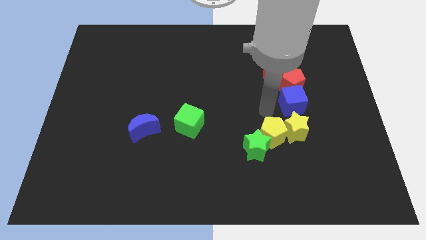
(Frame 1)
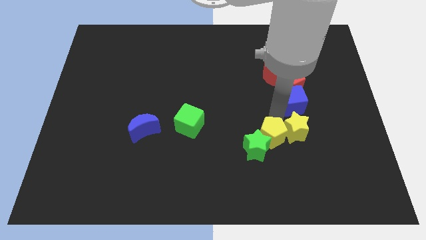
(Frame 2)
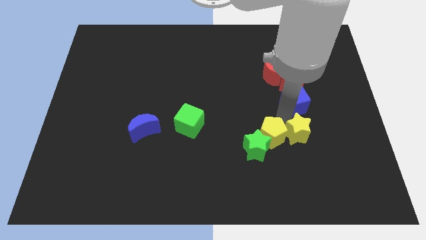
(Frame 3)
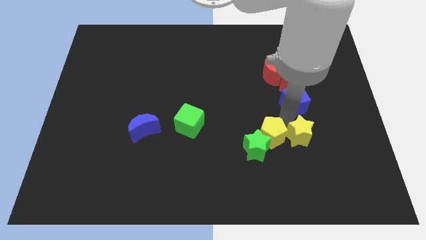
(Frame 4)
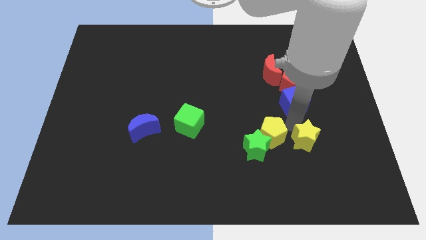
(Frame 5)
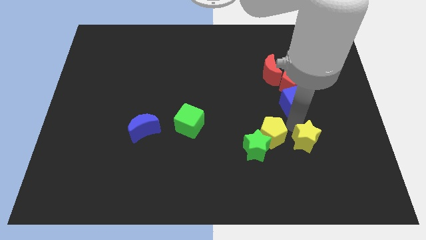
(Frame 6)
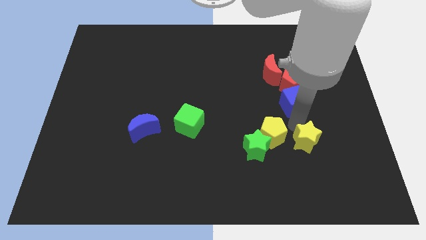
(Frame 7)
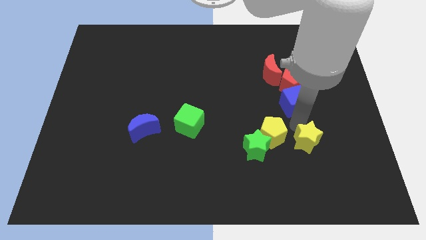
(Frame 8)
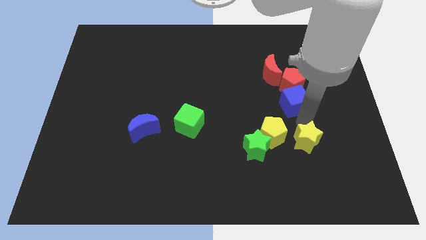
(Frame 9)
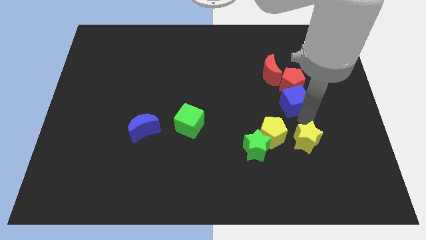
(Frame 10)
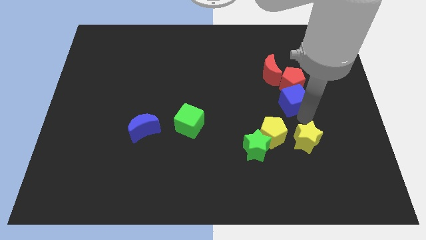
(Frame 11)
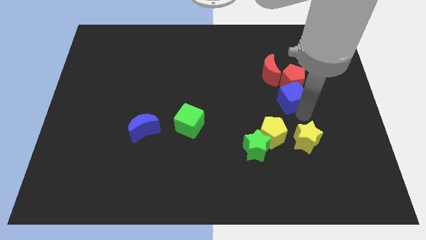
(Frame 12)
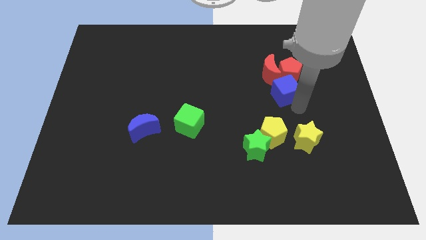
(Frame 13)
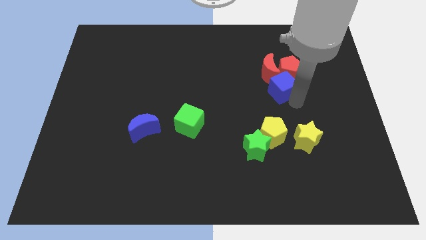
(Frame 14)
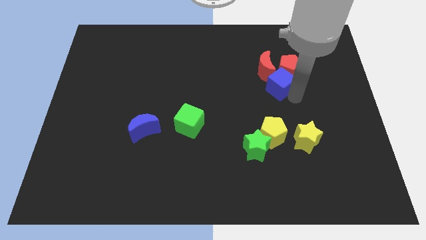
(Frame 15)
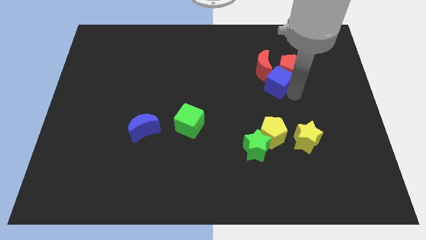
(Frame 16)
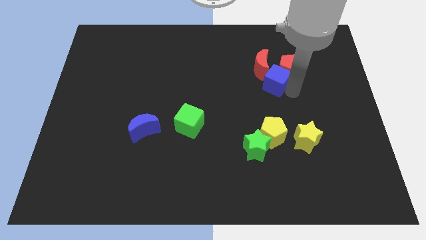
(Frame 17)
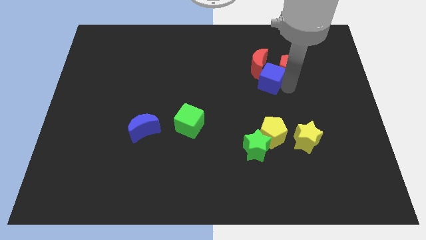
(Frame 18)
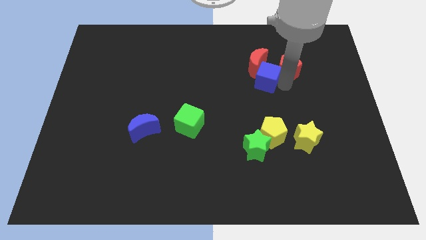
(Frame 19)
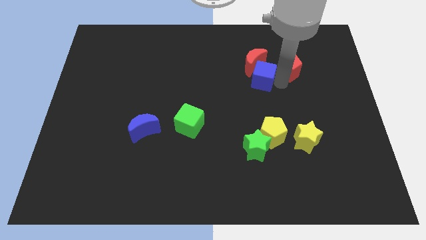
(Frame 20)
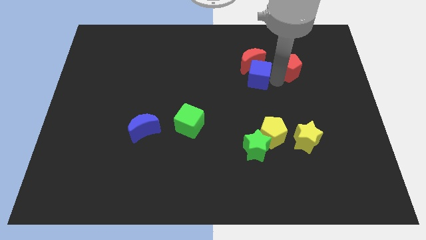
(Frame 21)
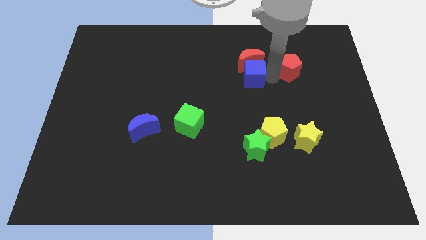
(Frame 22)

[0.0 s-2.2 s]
separate the yellow star and blue cube from each other

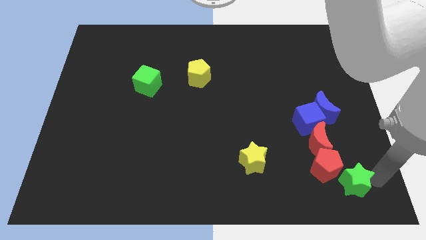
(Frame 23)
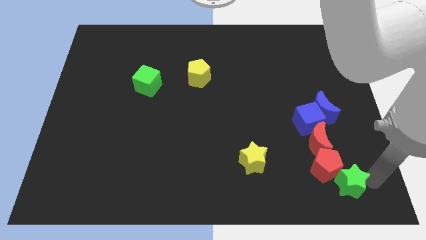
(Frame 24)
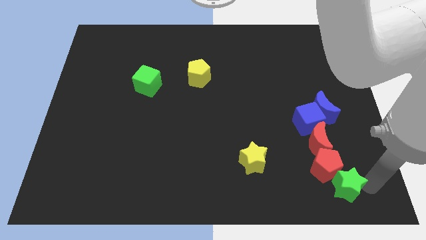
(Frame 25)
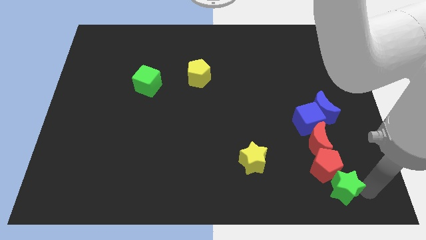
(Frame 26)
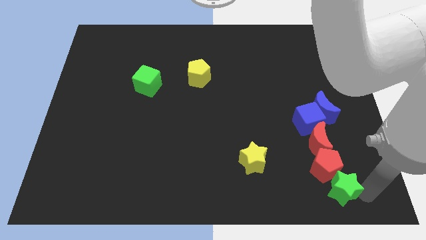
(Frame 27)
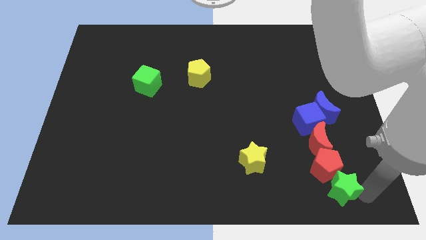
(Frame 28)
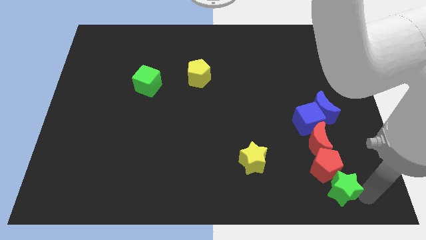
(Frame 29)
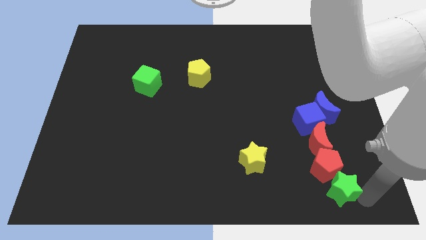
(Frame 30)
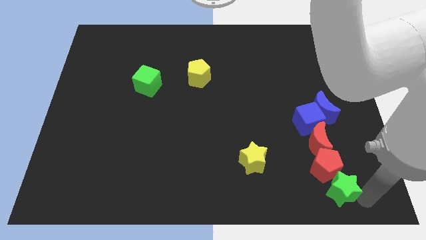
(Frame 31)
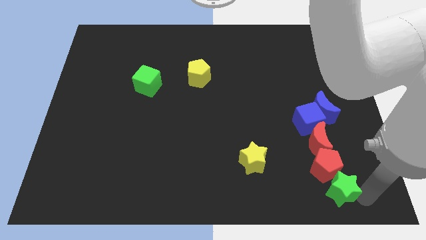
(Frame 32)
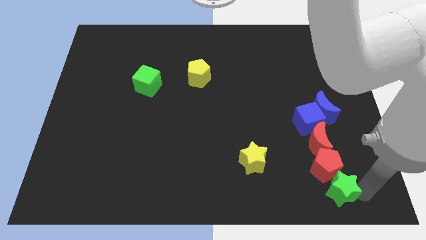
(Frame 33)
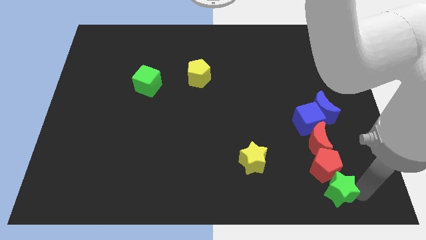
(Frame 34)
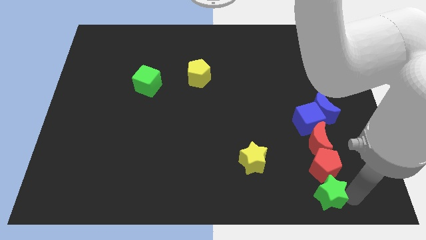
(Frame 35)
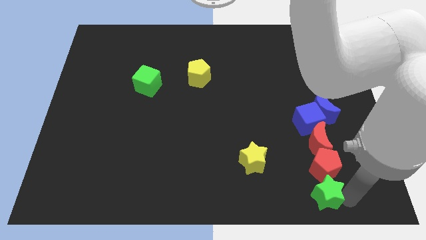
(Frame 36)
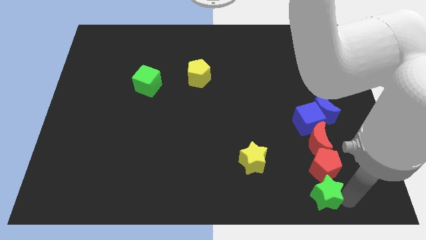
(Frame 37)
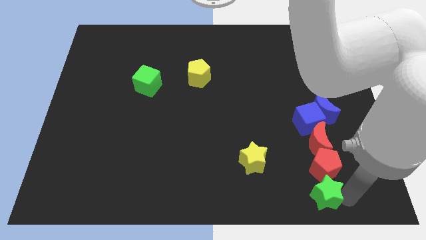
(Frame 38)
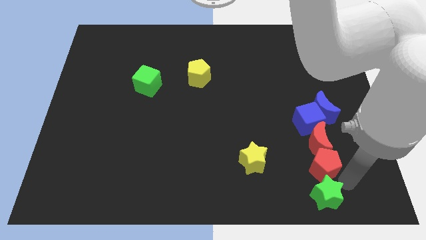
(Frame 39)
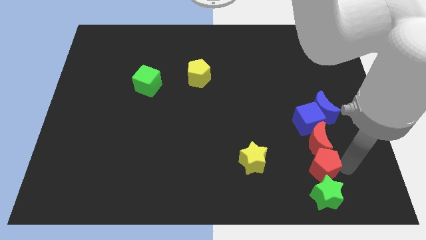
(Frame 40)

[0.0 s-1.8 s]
move the green star below to the red pentagon

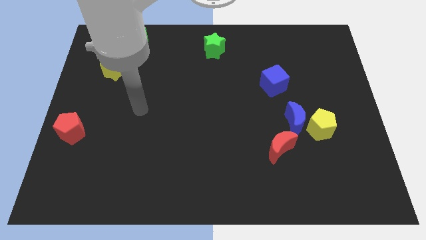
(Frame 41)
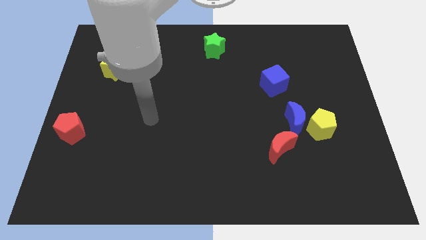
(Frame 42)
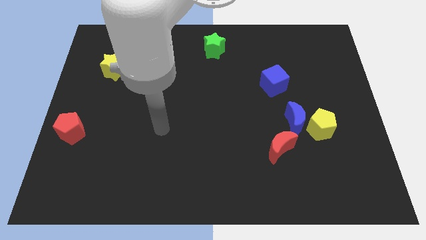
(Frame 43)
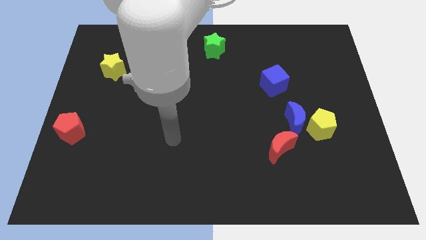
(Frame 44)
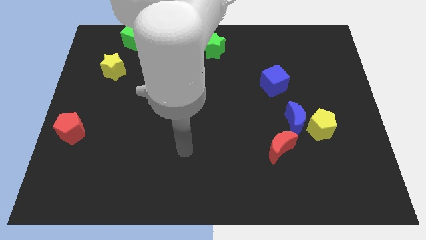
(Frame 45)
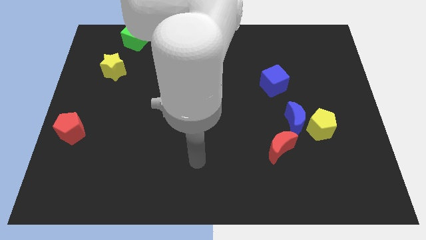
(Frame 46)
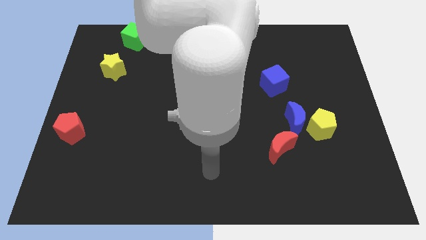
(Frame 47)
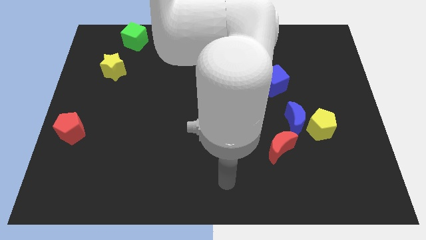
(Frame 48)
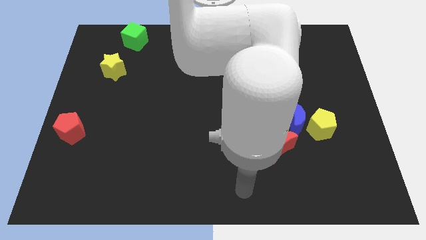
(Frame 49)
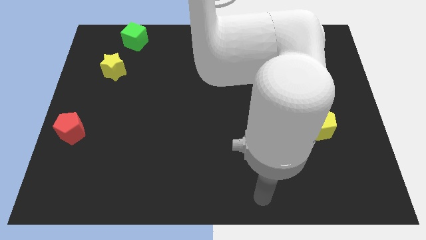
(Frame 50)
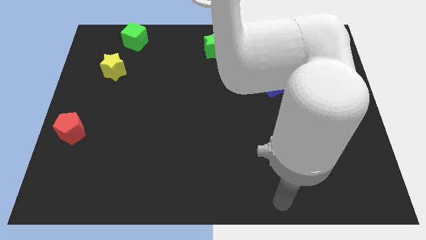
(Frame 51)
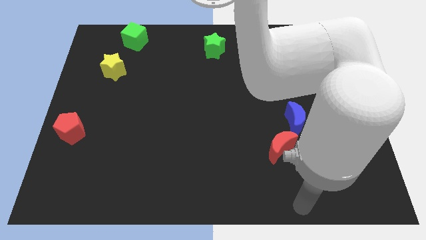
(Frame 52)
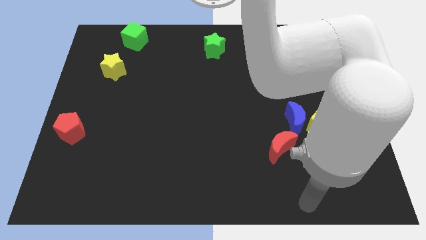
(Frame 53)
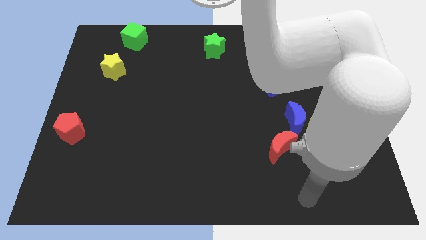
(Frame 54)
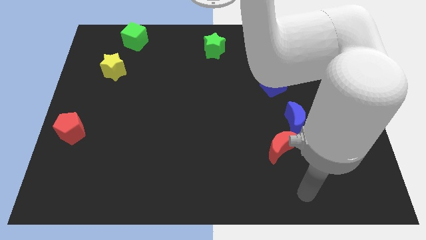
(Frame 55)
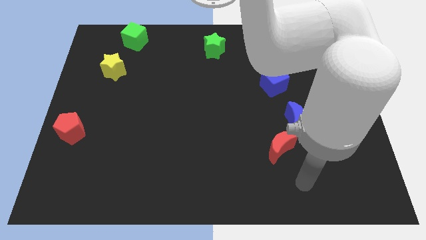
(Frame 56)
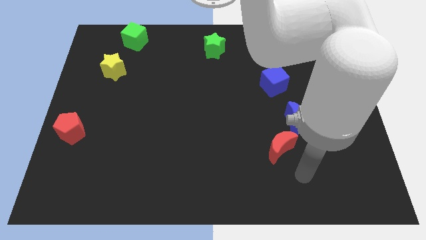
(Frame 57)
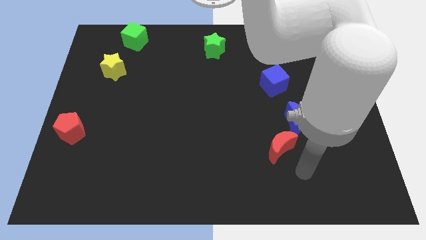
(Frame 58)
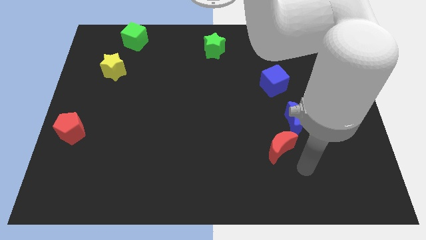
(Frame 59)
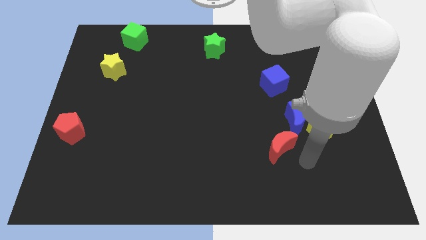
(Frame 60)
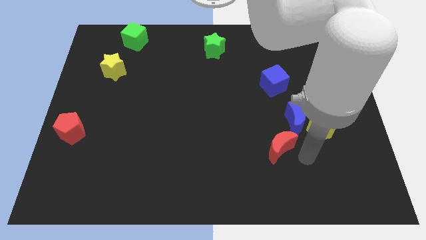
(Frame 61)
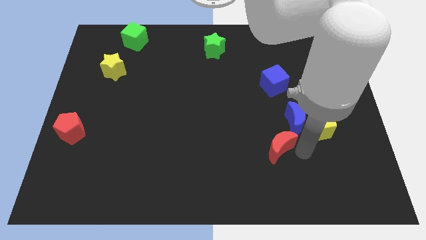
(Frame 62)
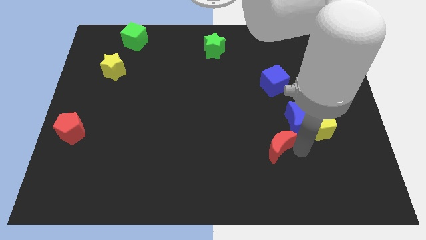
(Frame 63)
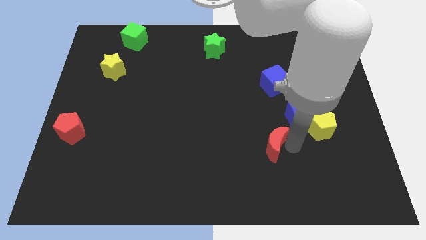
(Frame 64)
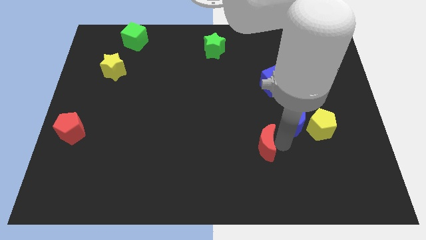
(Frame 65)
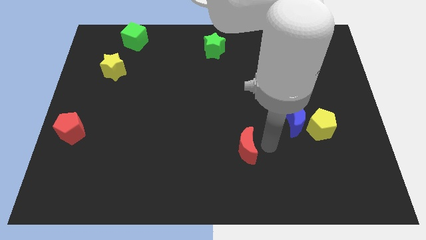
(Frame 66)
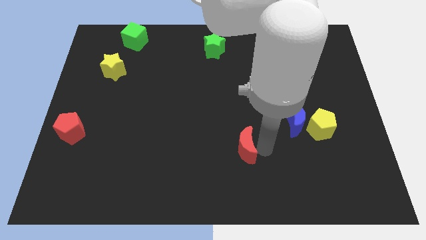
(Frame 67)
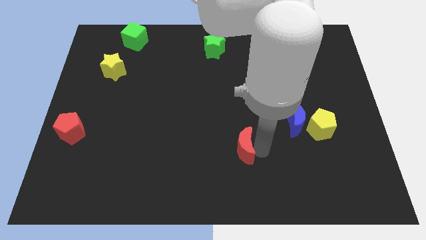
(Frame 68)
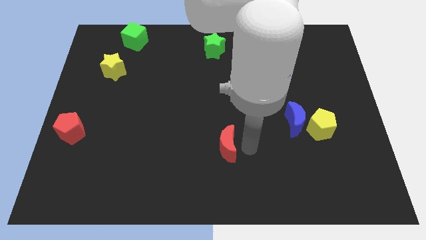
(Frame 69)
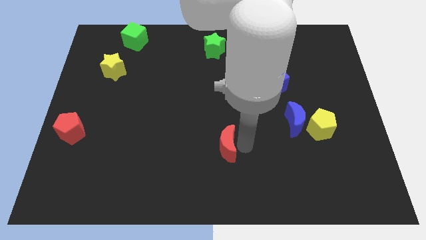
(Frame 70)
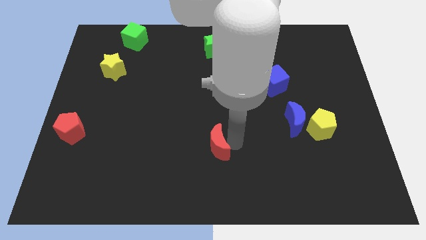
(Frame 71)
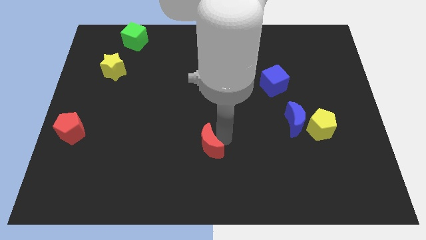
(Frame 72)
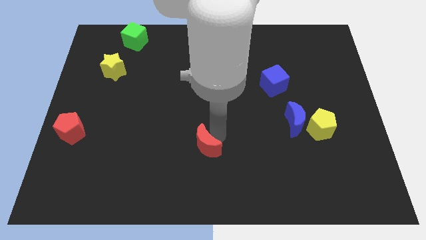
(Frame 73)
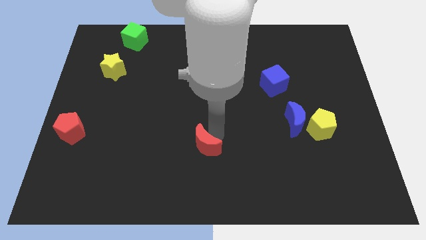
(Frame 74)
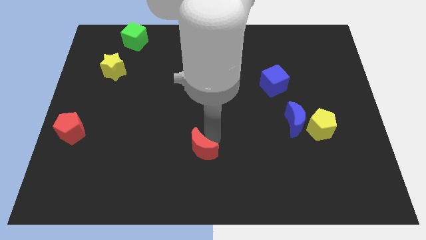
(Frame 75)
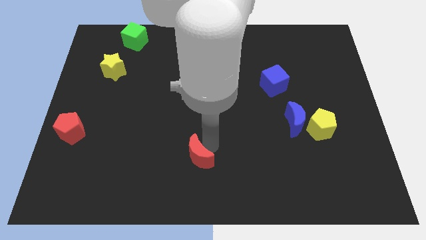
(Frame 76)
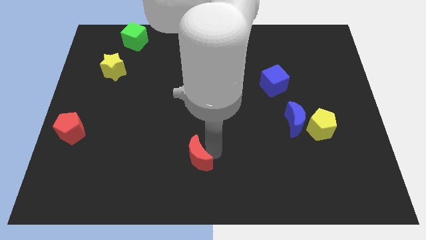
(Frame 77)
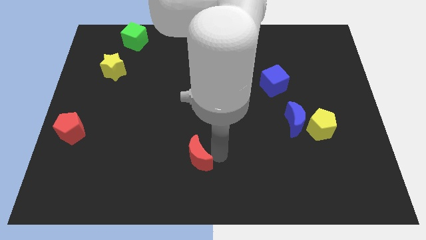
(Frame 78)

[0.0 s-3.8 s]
push the red crescent to the left of the board

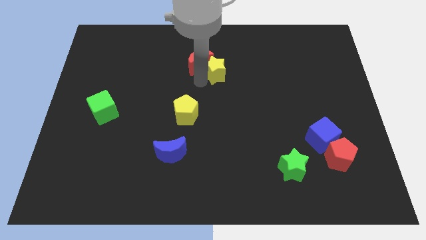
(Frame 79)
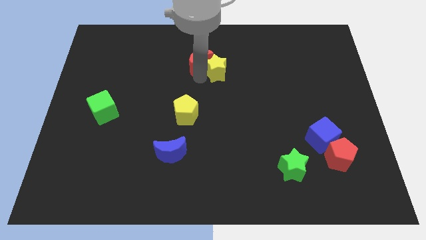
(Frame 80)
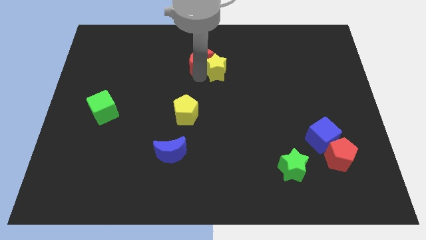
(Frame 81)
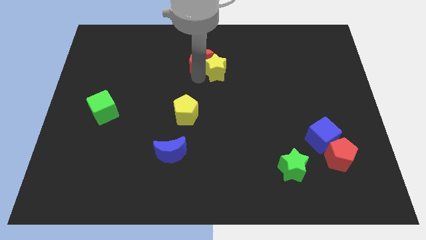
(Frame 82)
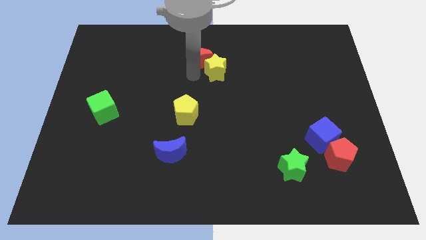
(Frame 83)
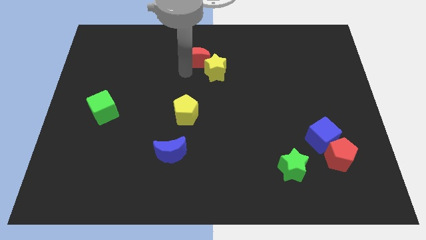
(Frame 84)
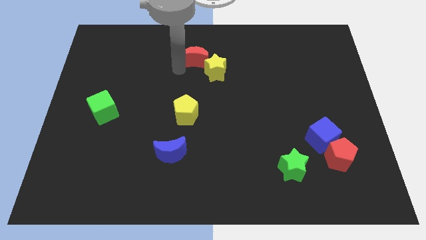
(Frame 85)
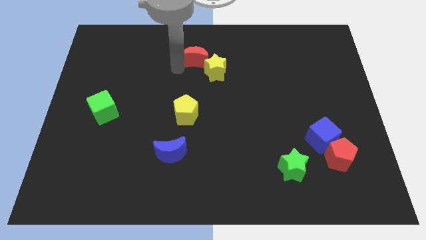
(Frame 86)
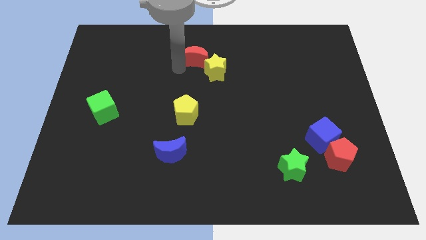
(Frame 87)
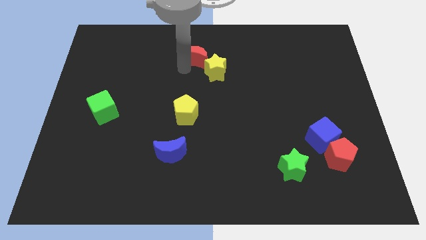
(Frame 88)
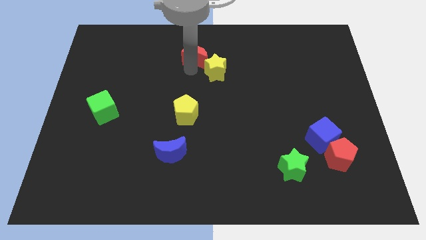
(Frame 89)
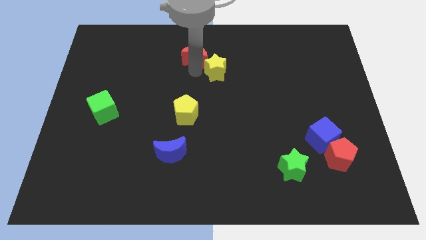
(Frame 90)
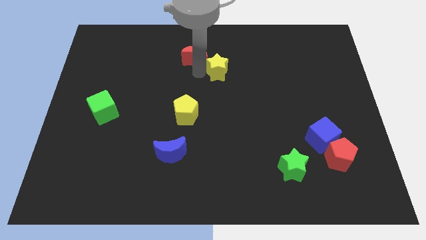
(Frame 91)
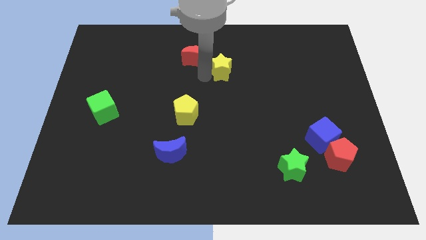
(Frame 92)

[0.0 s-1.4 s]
separate the red crescent from yellow star
